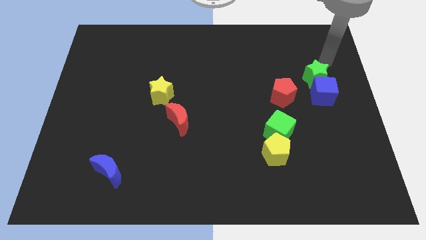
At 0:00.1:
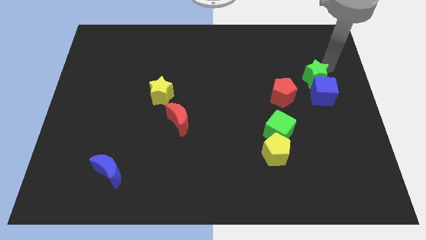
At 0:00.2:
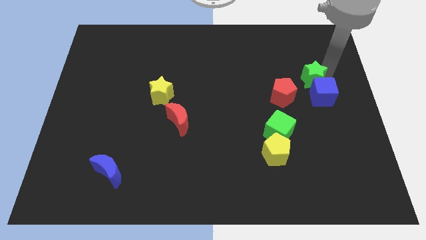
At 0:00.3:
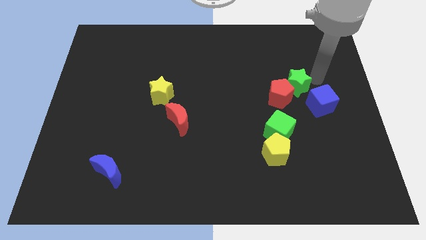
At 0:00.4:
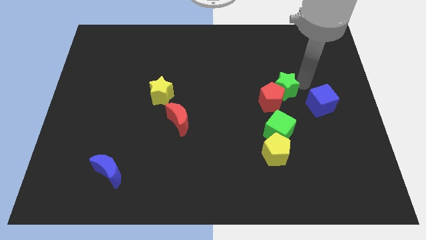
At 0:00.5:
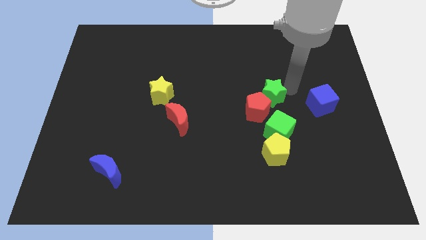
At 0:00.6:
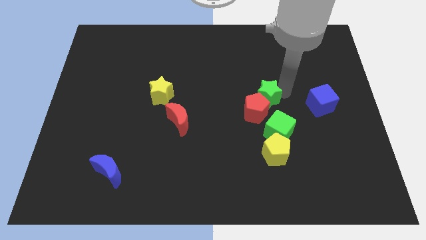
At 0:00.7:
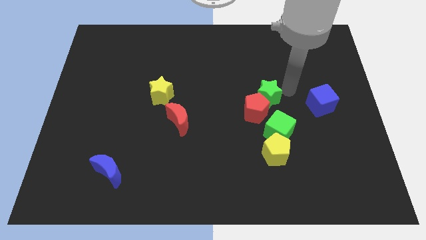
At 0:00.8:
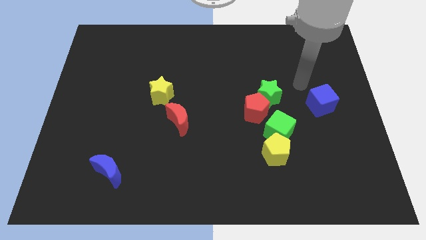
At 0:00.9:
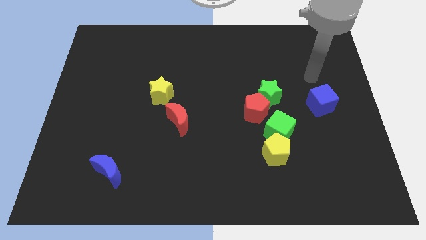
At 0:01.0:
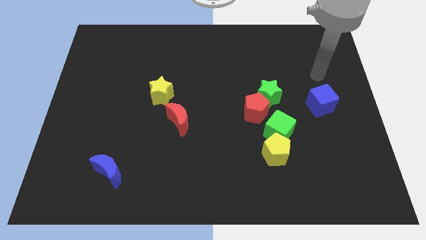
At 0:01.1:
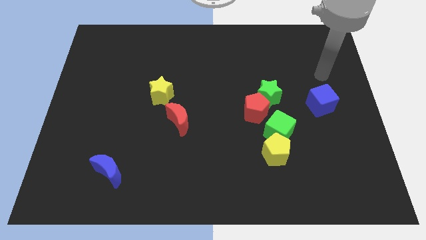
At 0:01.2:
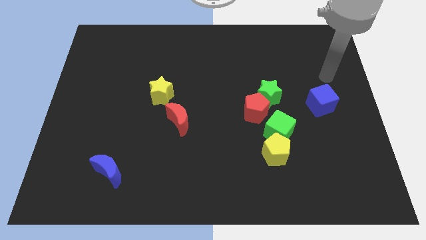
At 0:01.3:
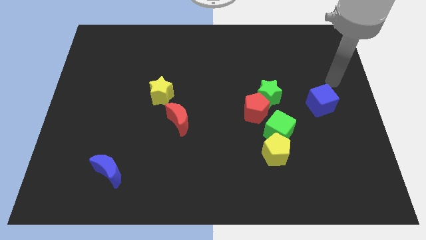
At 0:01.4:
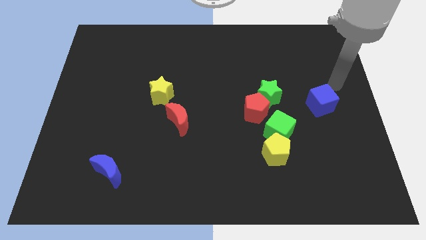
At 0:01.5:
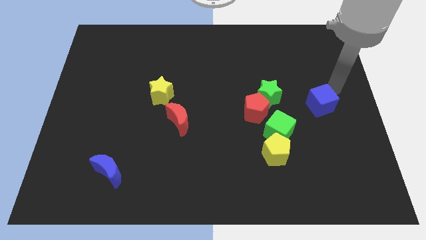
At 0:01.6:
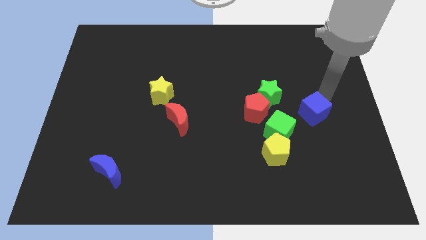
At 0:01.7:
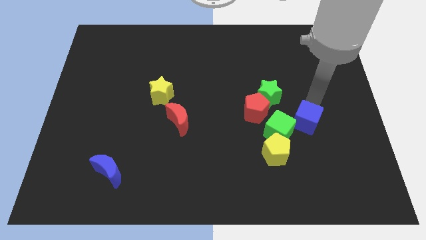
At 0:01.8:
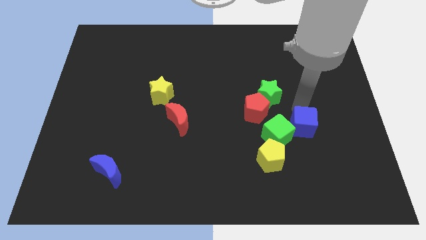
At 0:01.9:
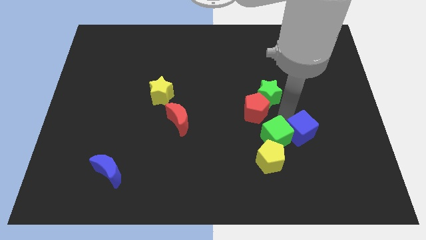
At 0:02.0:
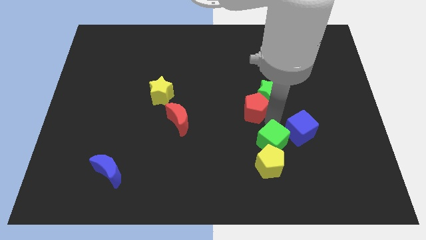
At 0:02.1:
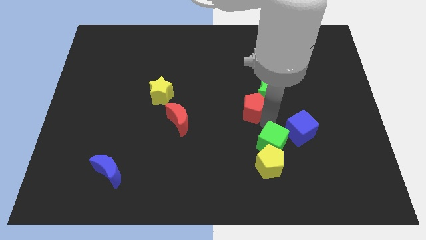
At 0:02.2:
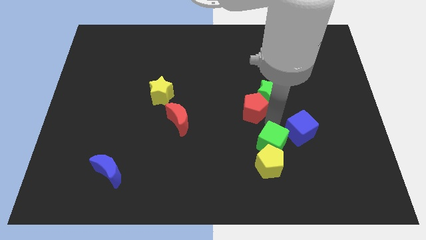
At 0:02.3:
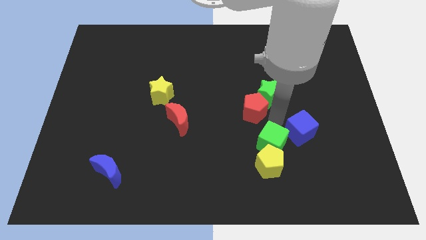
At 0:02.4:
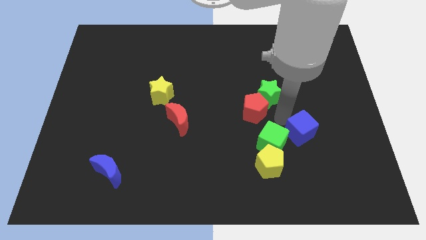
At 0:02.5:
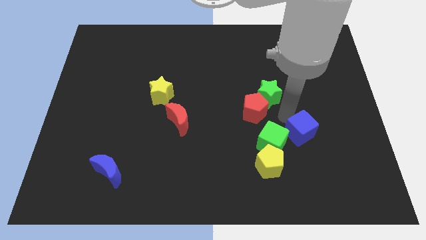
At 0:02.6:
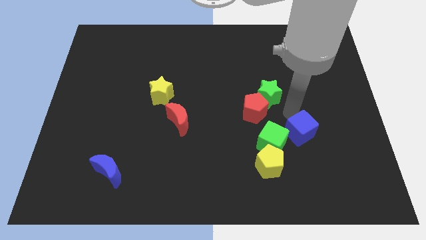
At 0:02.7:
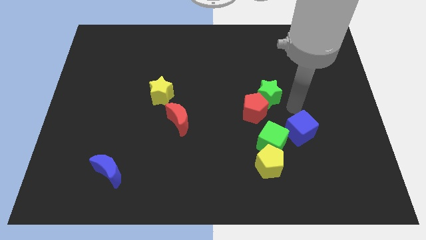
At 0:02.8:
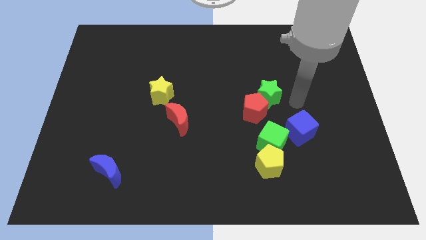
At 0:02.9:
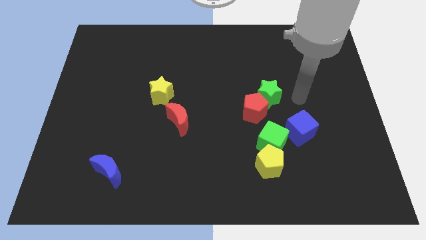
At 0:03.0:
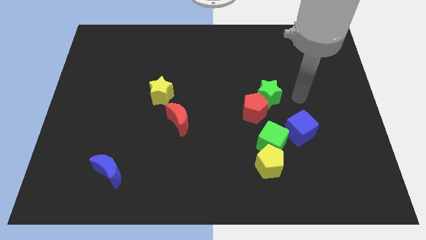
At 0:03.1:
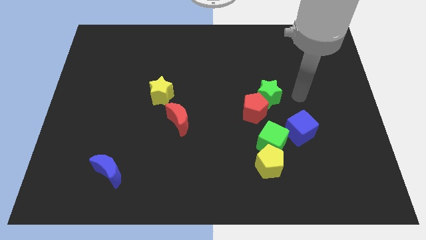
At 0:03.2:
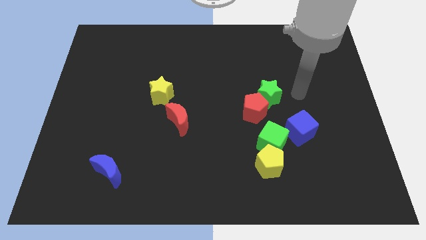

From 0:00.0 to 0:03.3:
move green cube slightly down

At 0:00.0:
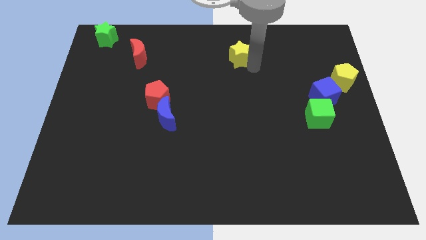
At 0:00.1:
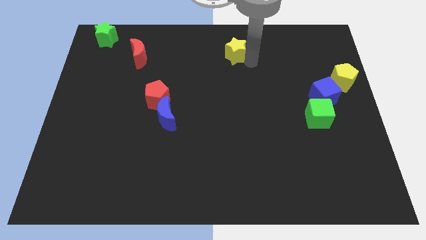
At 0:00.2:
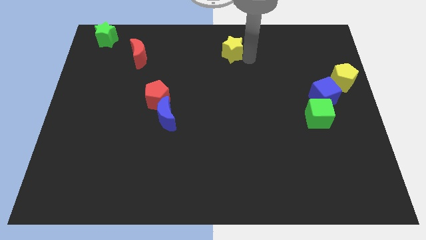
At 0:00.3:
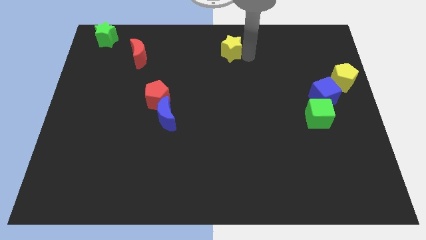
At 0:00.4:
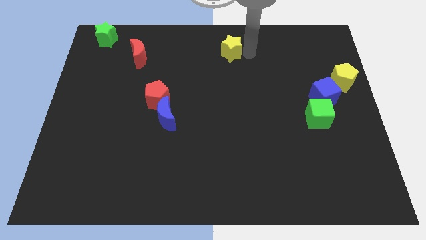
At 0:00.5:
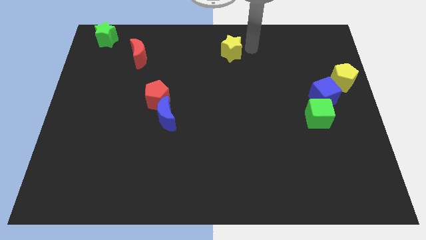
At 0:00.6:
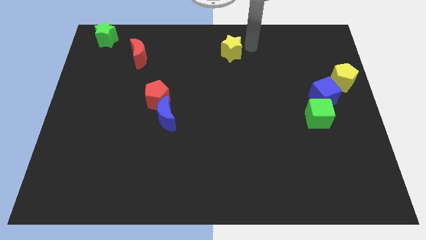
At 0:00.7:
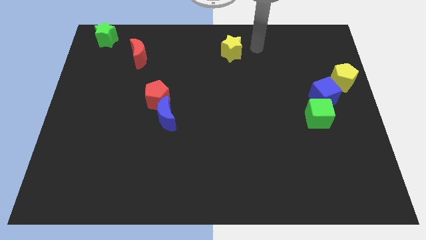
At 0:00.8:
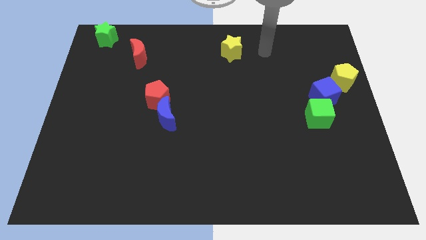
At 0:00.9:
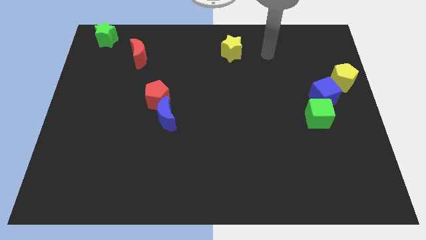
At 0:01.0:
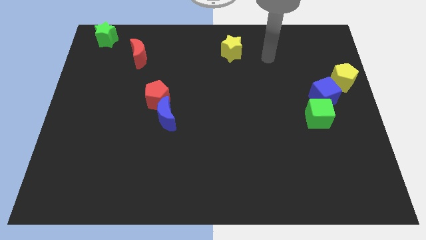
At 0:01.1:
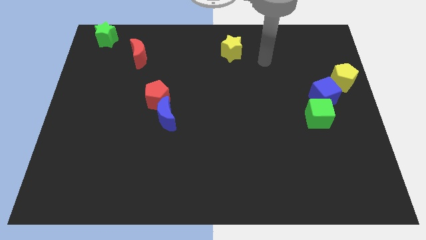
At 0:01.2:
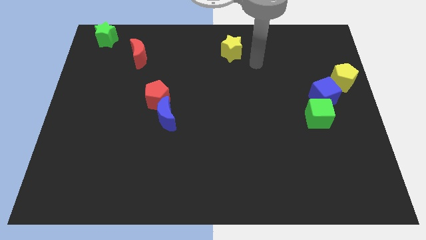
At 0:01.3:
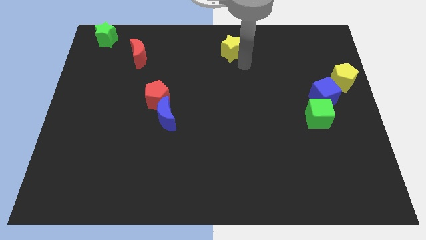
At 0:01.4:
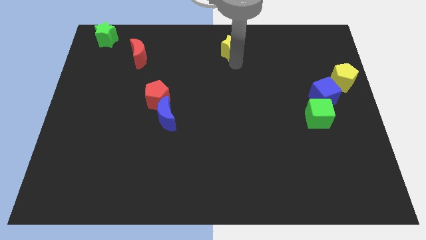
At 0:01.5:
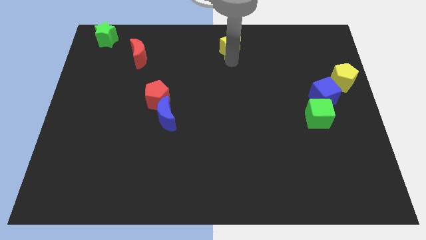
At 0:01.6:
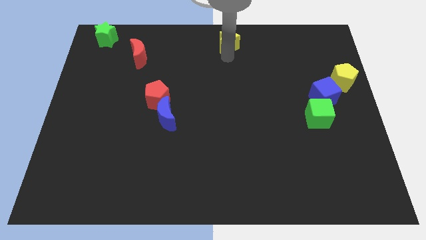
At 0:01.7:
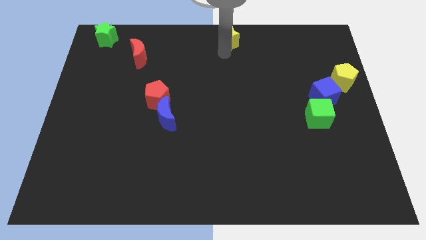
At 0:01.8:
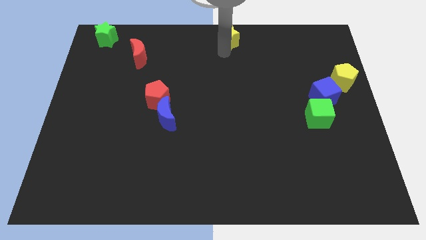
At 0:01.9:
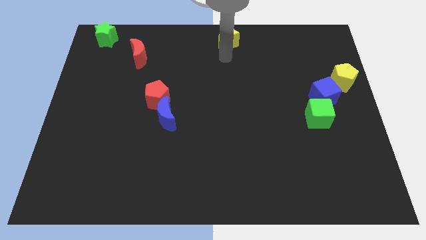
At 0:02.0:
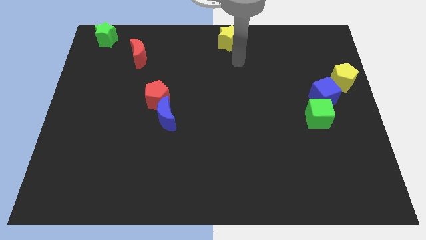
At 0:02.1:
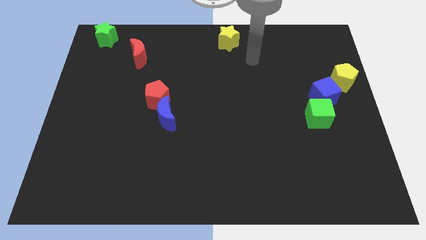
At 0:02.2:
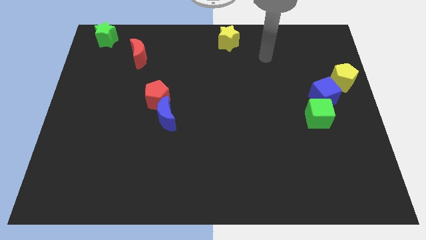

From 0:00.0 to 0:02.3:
place yellow star to the top center of the board

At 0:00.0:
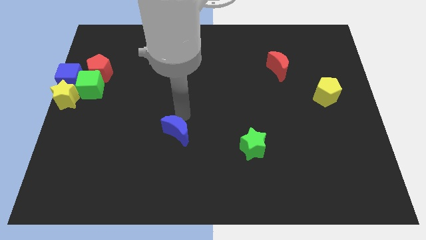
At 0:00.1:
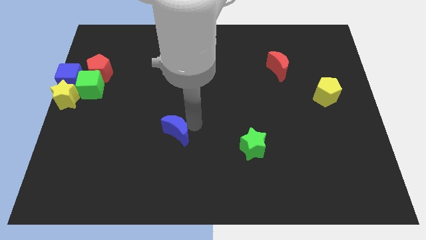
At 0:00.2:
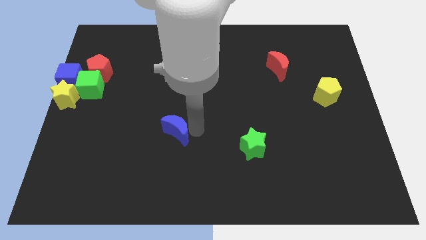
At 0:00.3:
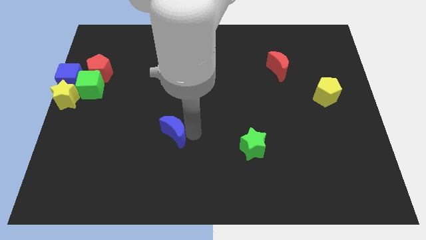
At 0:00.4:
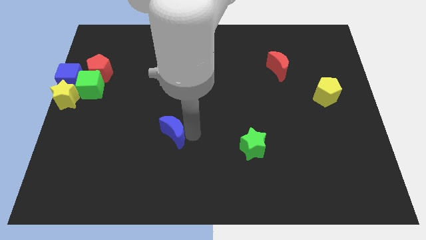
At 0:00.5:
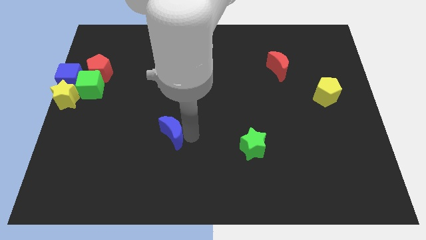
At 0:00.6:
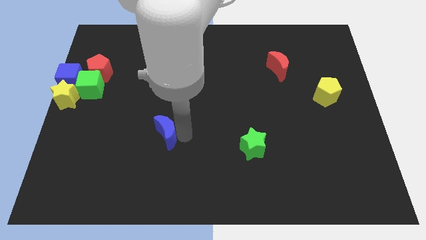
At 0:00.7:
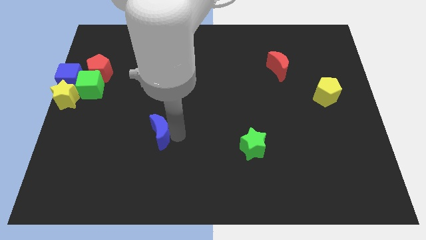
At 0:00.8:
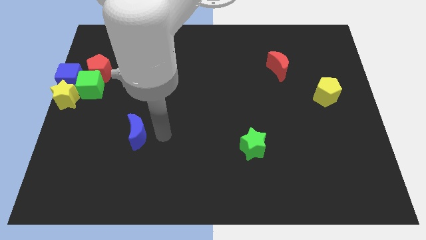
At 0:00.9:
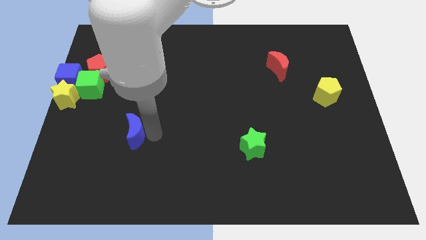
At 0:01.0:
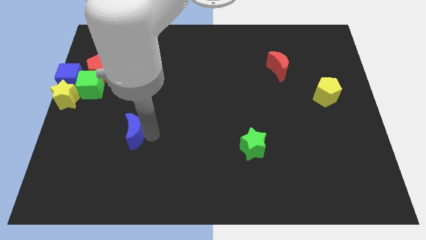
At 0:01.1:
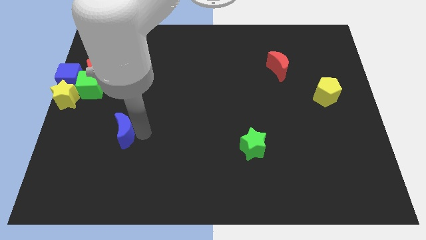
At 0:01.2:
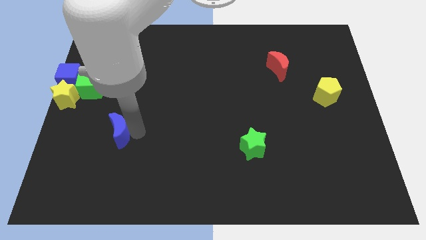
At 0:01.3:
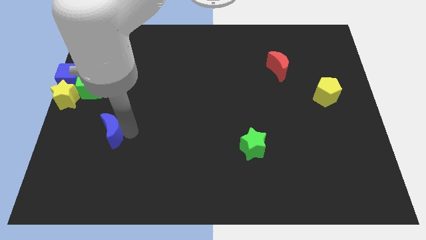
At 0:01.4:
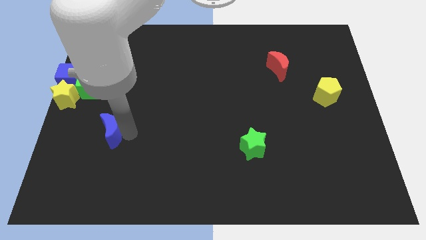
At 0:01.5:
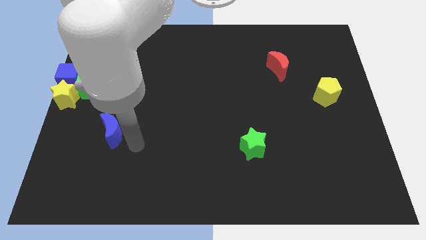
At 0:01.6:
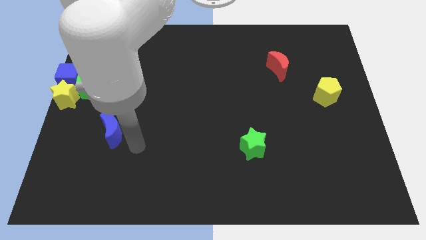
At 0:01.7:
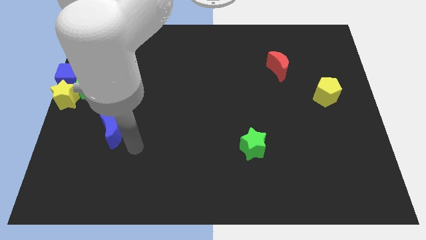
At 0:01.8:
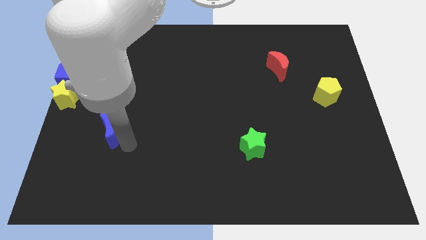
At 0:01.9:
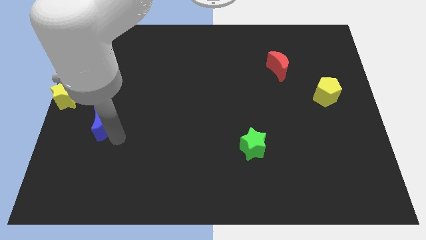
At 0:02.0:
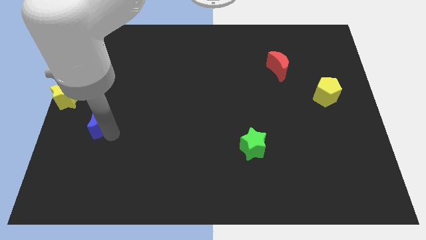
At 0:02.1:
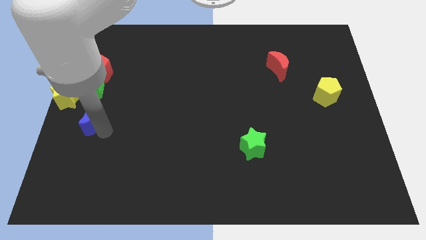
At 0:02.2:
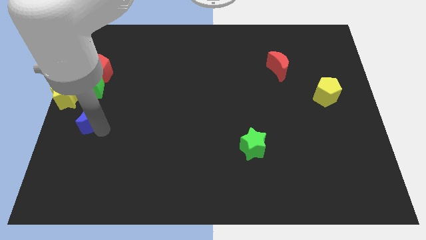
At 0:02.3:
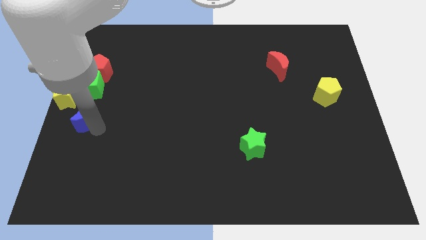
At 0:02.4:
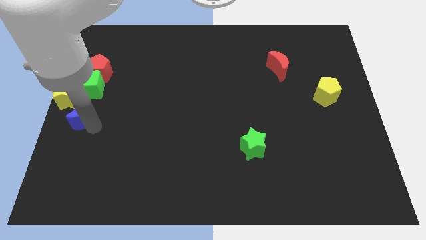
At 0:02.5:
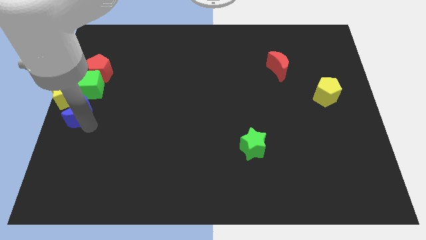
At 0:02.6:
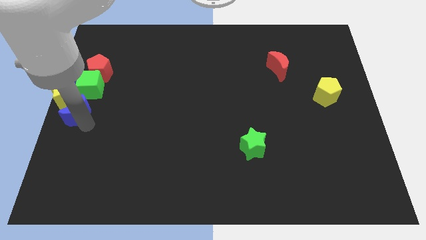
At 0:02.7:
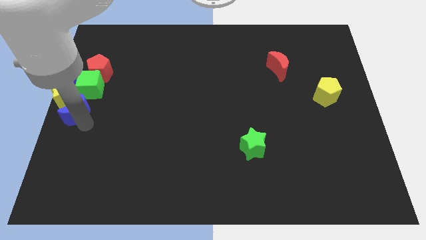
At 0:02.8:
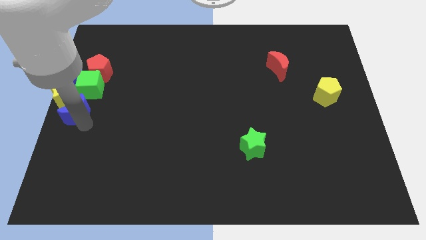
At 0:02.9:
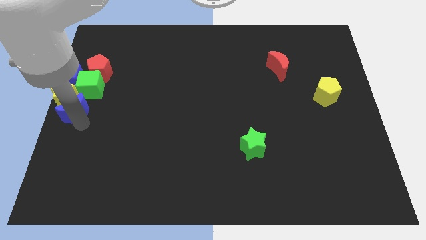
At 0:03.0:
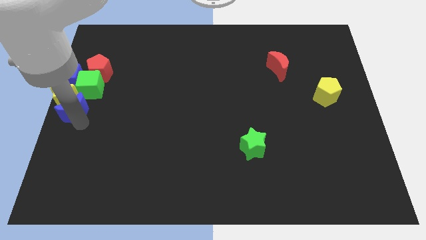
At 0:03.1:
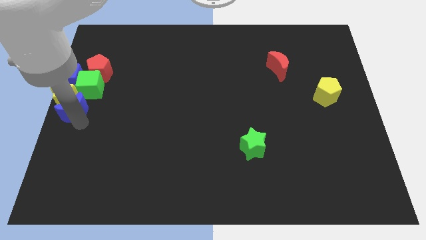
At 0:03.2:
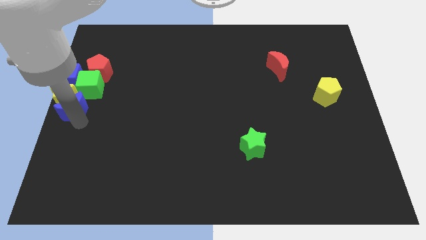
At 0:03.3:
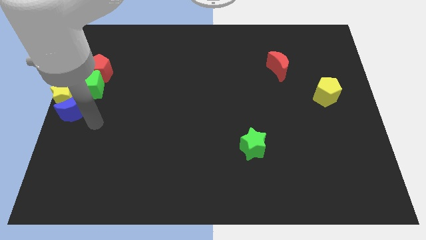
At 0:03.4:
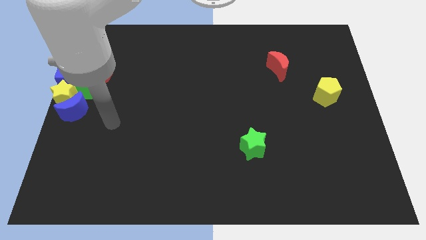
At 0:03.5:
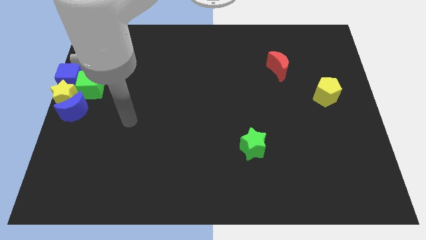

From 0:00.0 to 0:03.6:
push the blue moon to the bottom of the yellow star
